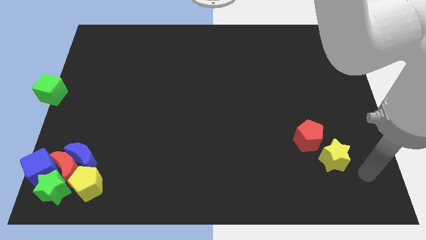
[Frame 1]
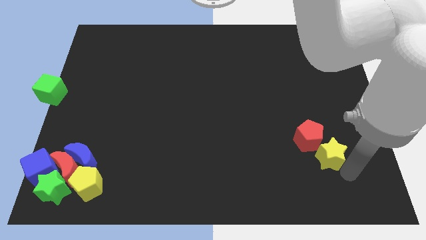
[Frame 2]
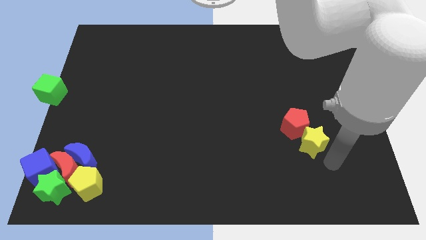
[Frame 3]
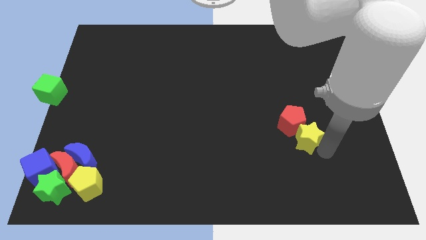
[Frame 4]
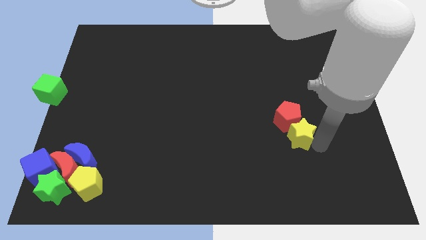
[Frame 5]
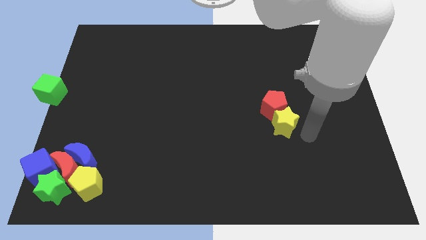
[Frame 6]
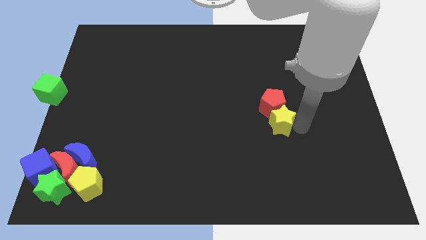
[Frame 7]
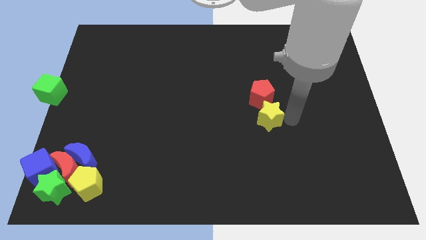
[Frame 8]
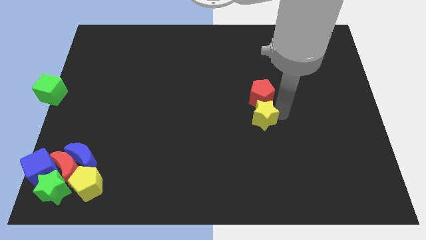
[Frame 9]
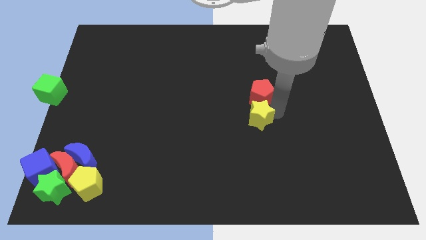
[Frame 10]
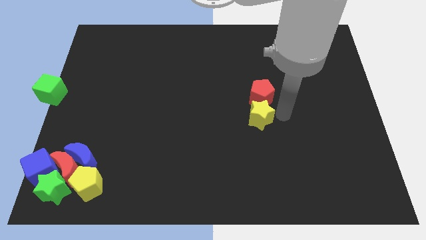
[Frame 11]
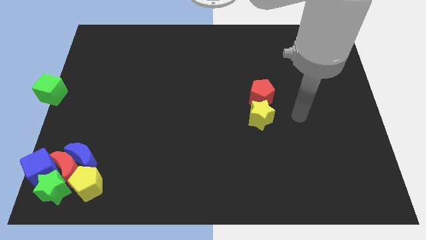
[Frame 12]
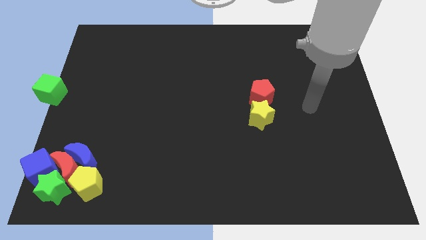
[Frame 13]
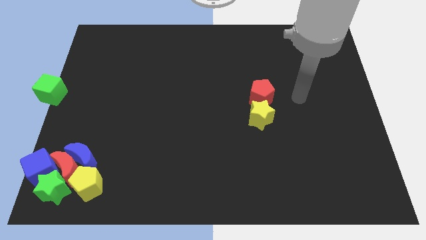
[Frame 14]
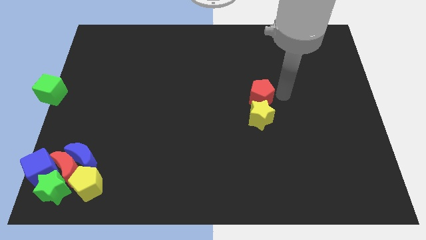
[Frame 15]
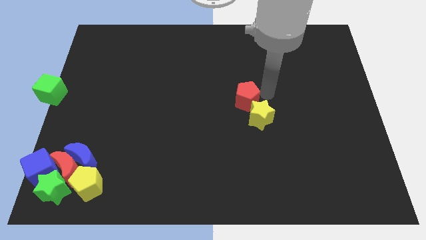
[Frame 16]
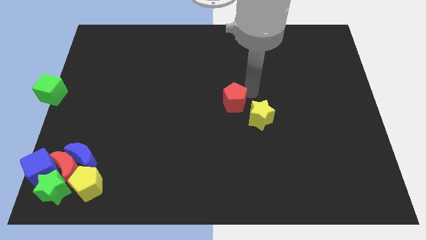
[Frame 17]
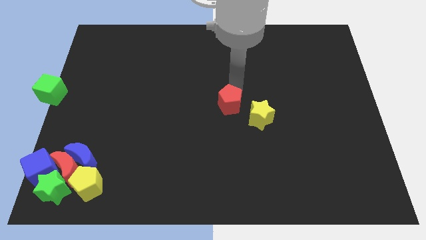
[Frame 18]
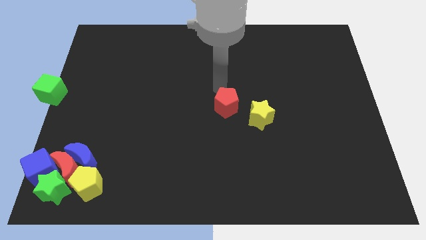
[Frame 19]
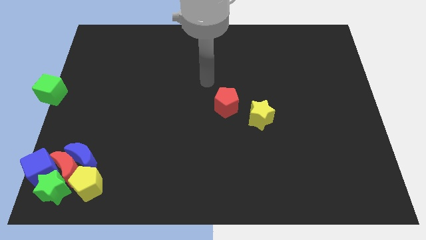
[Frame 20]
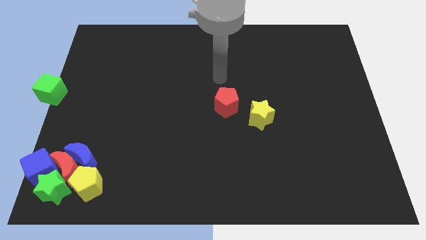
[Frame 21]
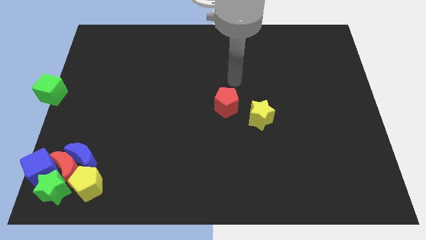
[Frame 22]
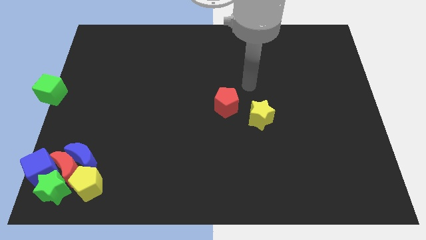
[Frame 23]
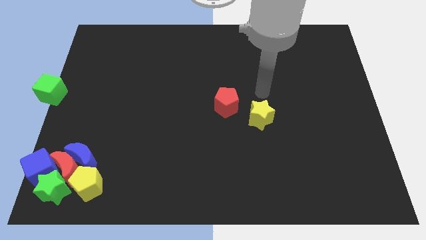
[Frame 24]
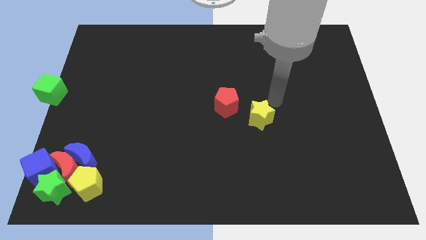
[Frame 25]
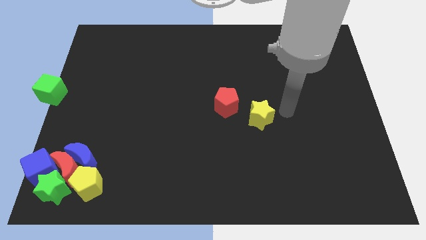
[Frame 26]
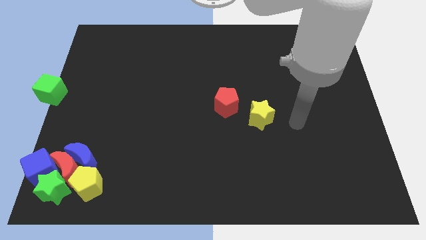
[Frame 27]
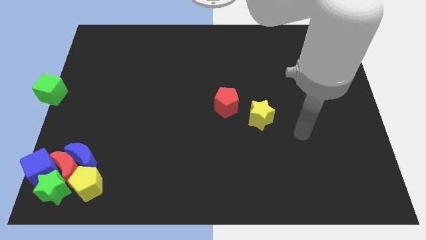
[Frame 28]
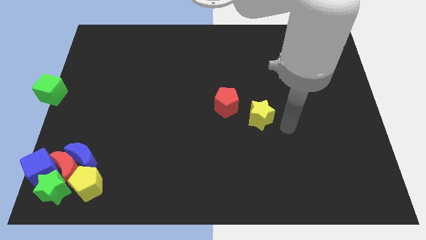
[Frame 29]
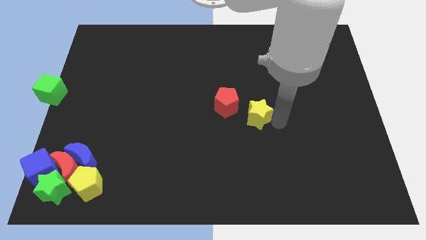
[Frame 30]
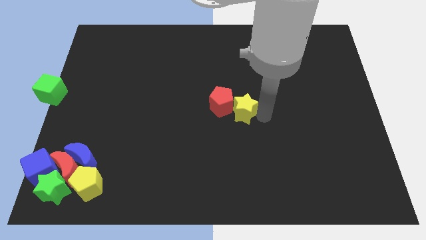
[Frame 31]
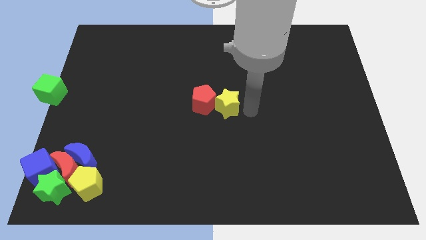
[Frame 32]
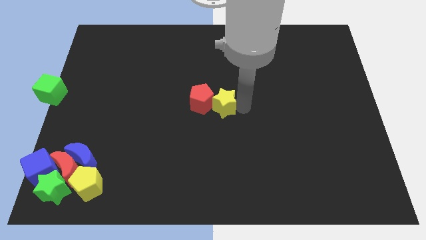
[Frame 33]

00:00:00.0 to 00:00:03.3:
push the yellow star into the red pentagon

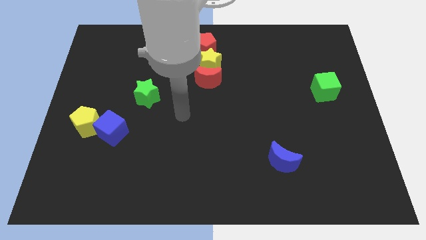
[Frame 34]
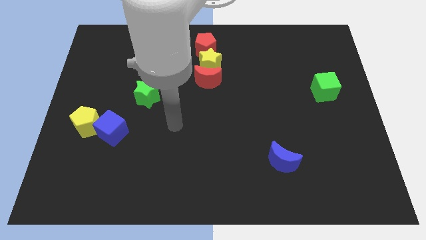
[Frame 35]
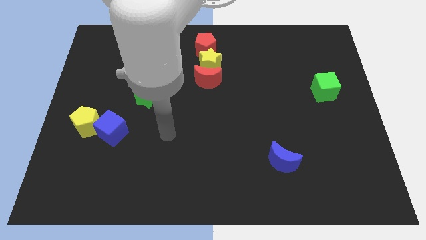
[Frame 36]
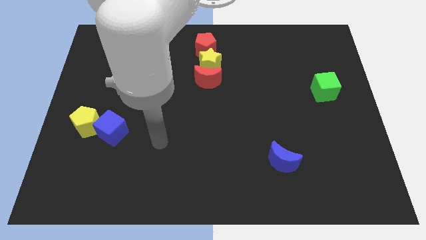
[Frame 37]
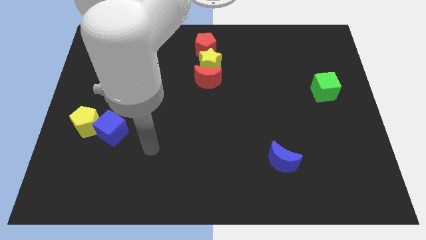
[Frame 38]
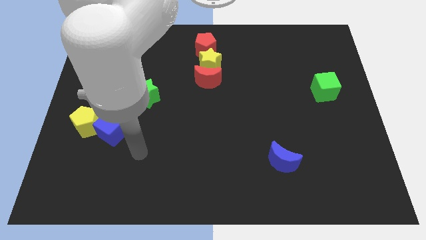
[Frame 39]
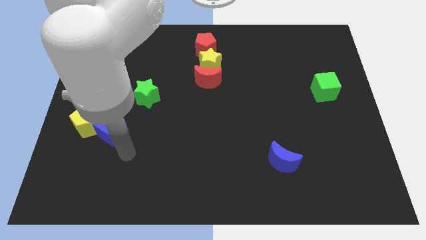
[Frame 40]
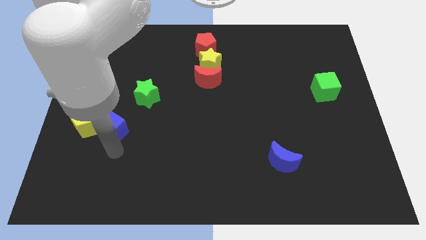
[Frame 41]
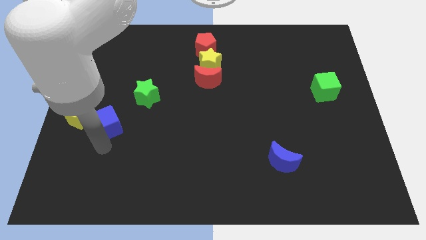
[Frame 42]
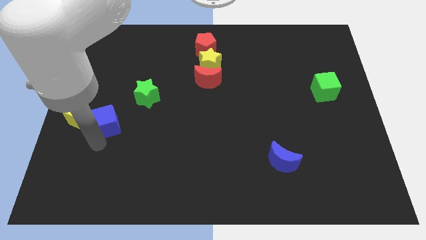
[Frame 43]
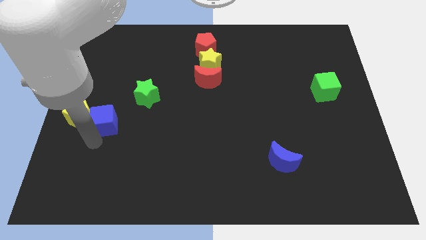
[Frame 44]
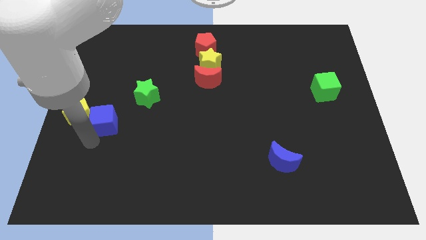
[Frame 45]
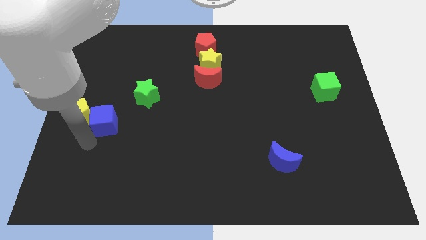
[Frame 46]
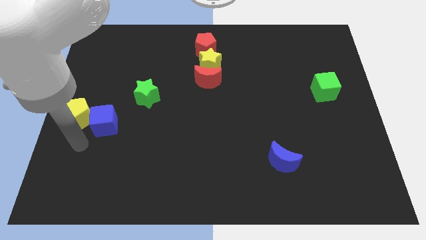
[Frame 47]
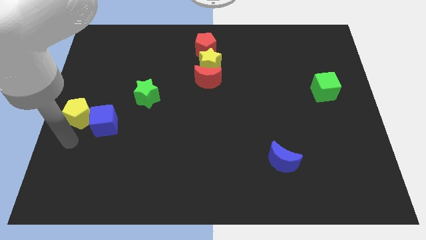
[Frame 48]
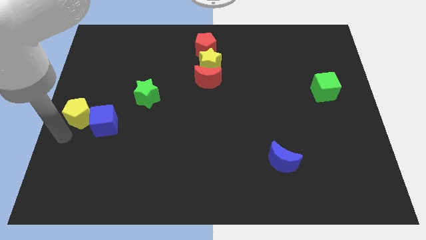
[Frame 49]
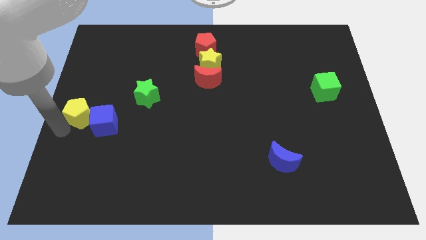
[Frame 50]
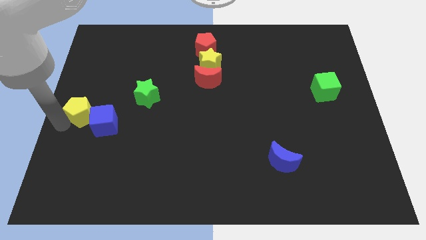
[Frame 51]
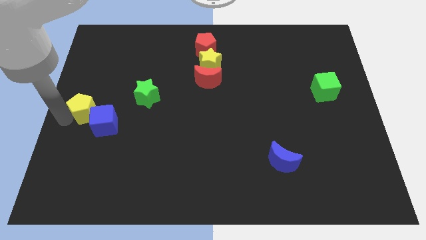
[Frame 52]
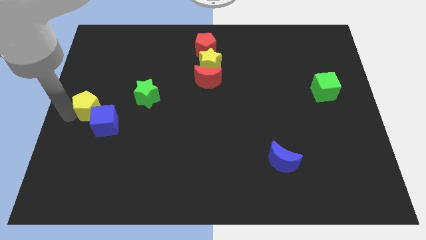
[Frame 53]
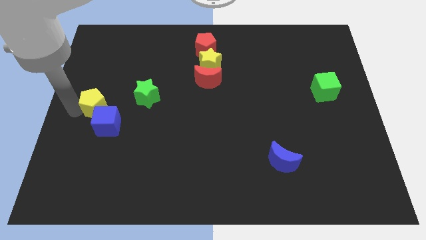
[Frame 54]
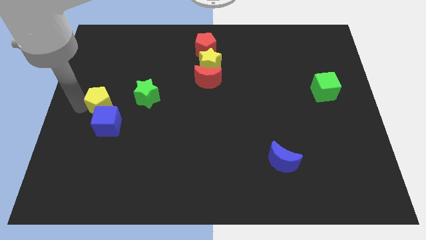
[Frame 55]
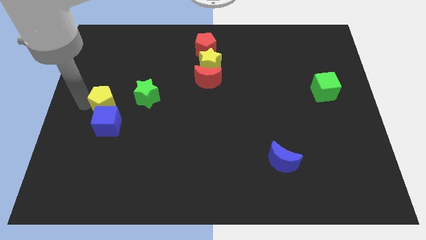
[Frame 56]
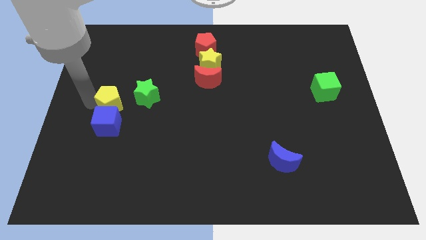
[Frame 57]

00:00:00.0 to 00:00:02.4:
push the yellow pentagon on top of blue cube

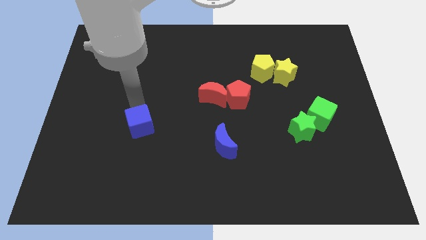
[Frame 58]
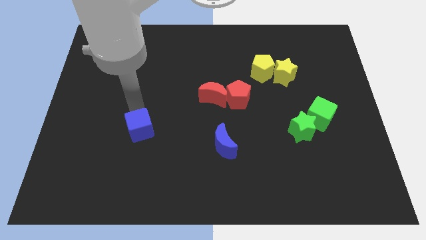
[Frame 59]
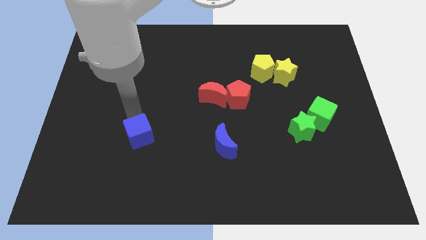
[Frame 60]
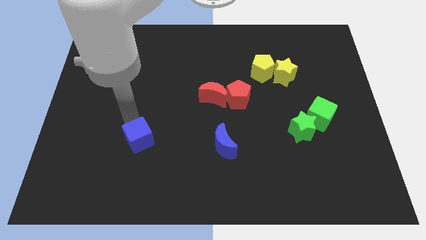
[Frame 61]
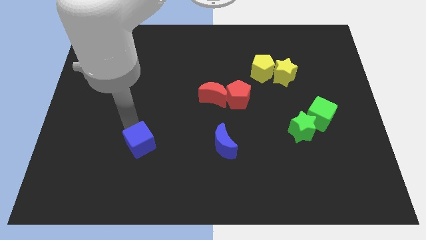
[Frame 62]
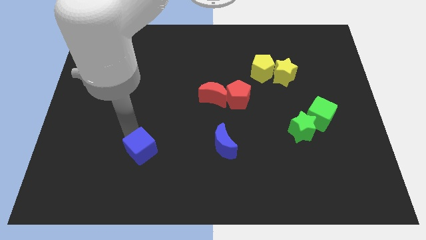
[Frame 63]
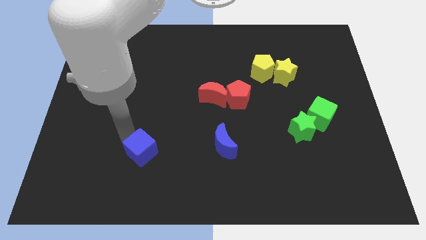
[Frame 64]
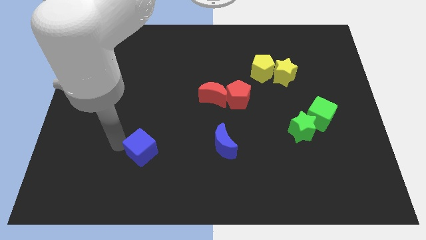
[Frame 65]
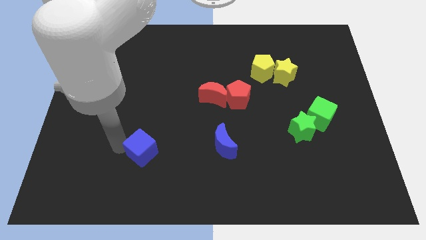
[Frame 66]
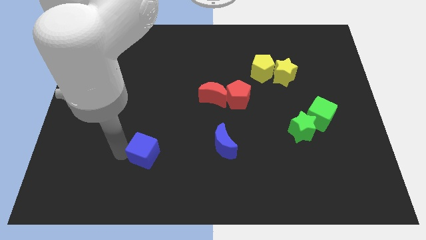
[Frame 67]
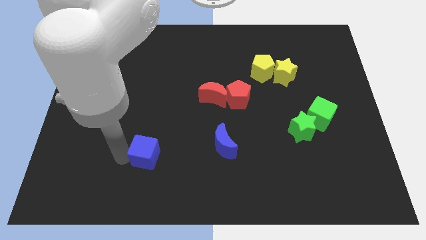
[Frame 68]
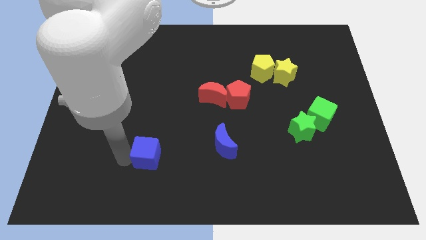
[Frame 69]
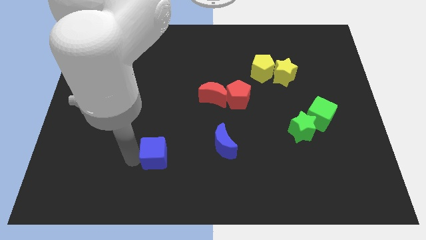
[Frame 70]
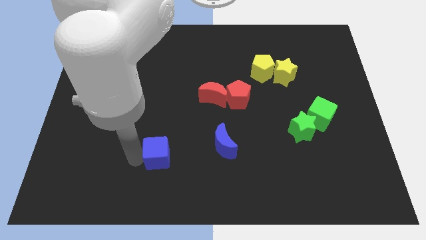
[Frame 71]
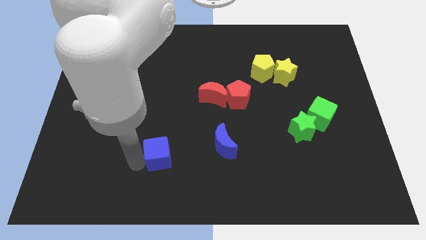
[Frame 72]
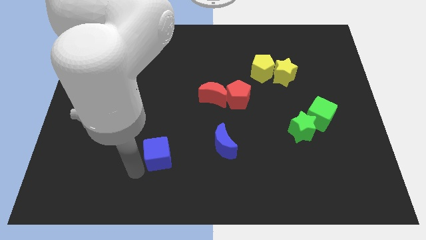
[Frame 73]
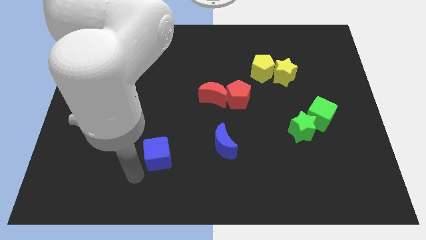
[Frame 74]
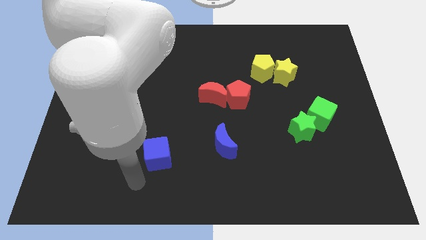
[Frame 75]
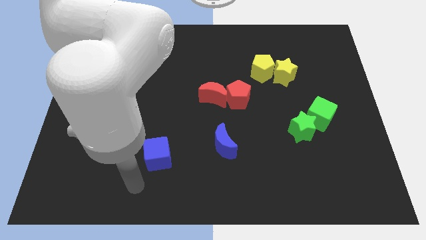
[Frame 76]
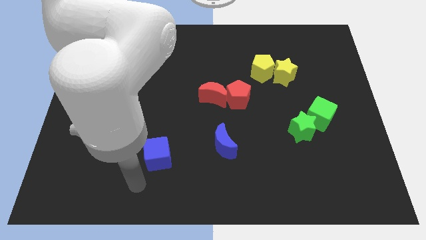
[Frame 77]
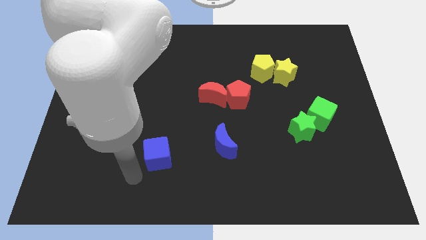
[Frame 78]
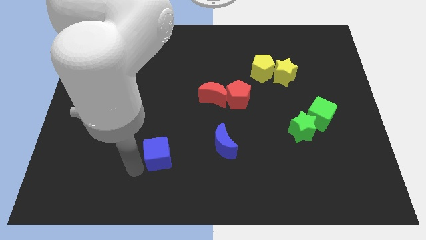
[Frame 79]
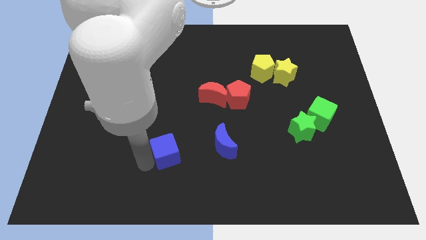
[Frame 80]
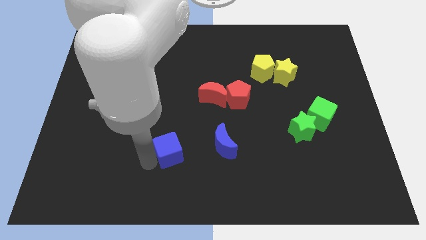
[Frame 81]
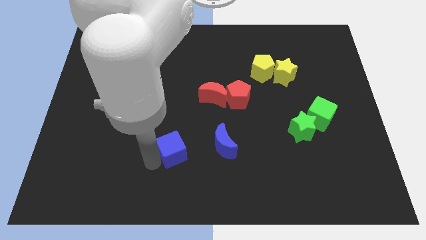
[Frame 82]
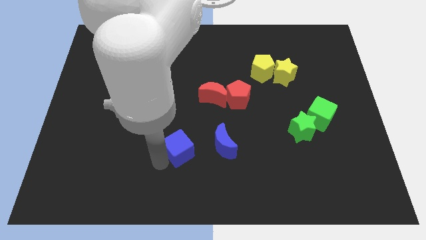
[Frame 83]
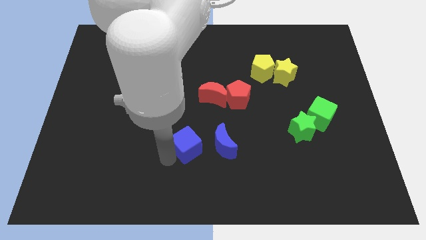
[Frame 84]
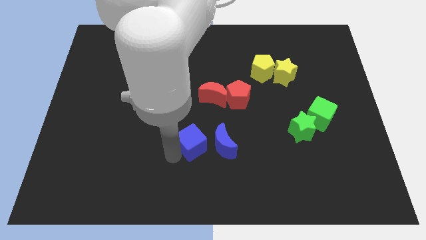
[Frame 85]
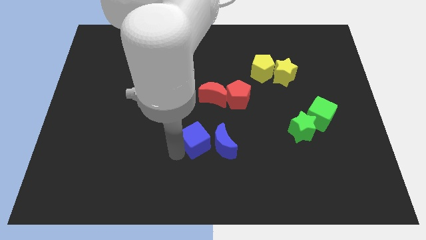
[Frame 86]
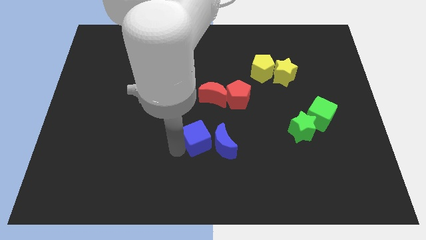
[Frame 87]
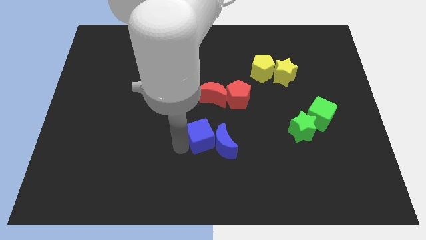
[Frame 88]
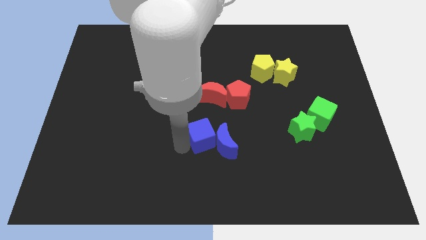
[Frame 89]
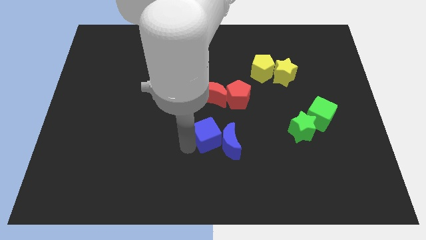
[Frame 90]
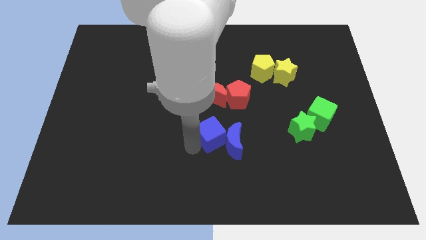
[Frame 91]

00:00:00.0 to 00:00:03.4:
push blue cube towards blue moon
